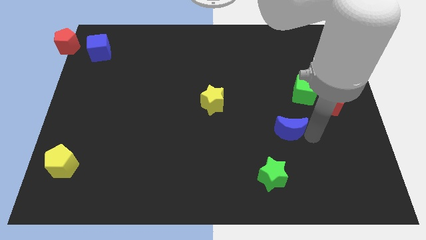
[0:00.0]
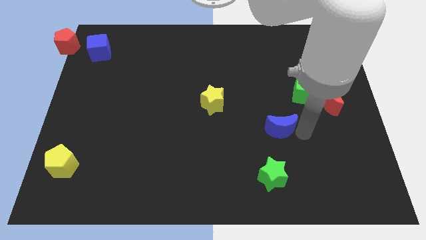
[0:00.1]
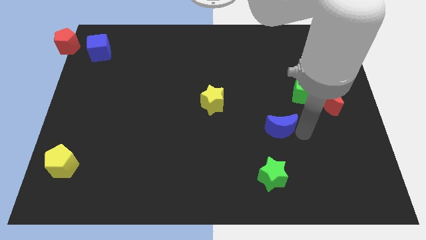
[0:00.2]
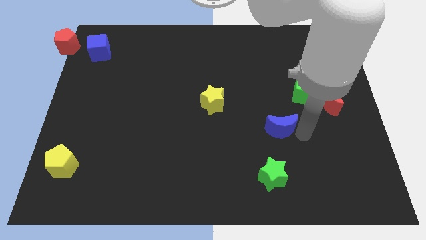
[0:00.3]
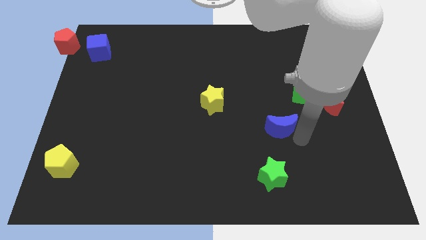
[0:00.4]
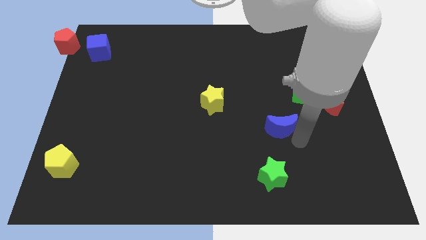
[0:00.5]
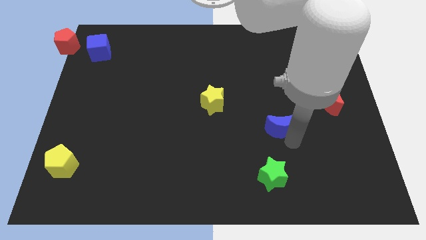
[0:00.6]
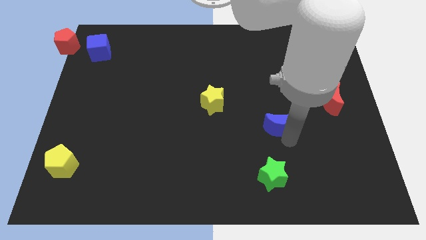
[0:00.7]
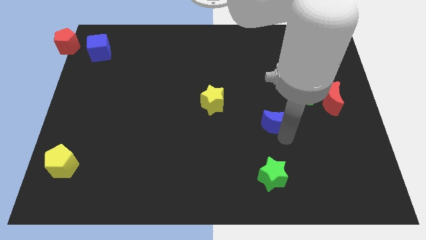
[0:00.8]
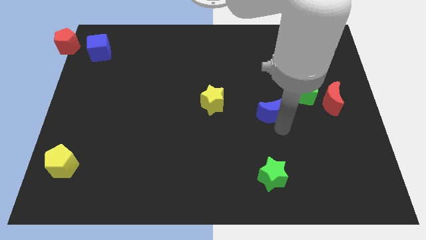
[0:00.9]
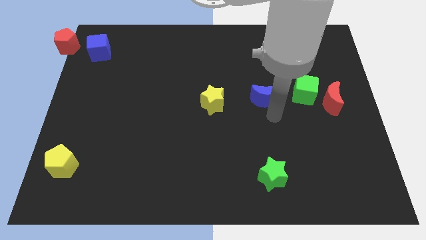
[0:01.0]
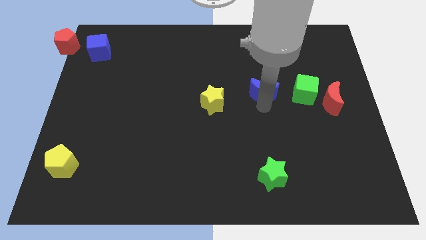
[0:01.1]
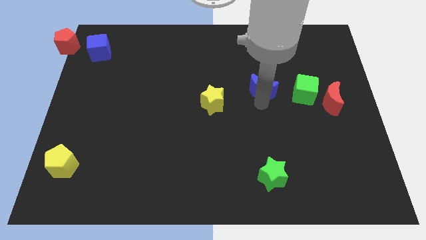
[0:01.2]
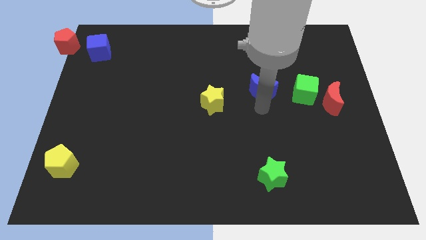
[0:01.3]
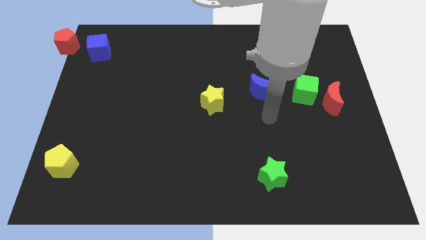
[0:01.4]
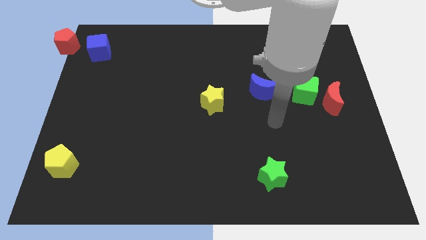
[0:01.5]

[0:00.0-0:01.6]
drag blue crescent above green star

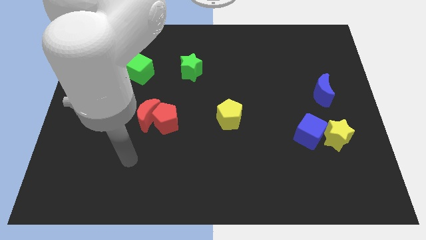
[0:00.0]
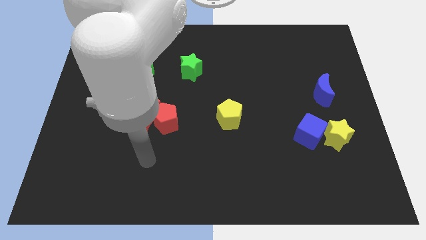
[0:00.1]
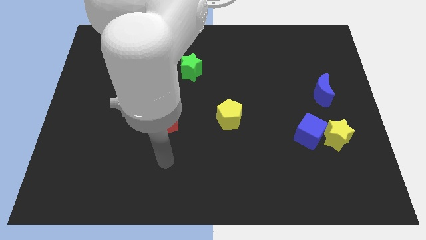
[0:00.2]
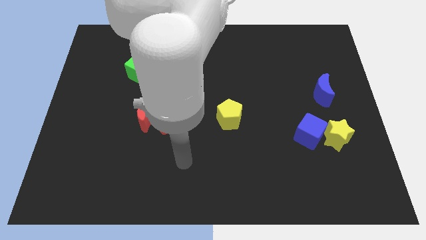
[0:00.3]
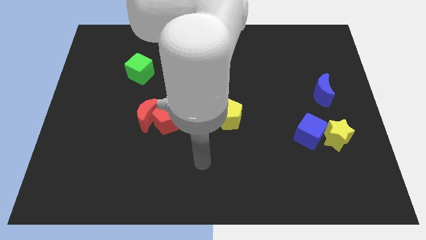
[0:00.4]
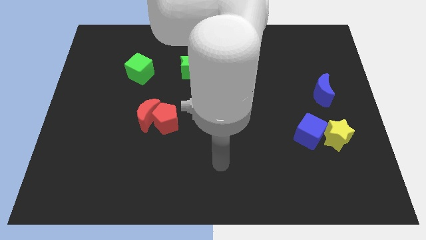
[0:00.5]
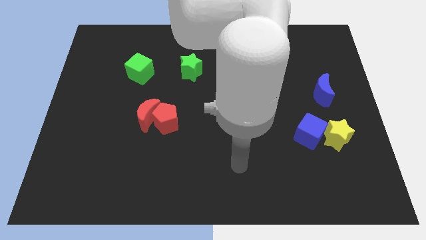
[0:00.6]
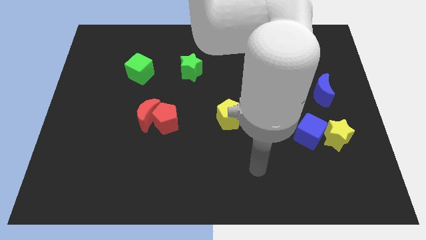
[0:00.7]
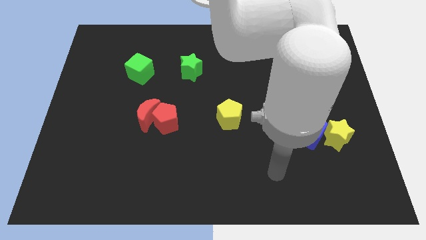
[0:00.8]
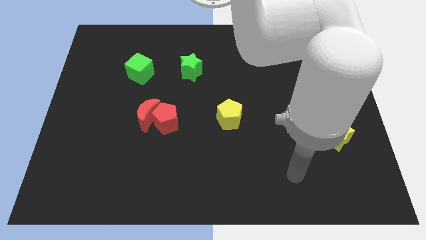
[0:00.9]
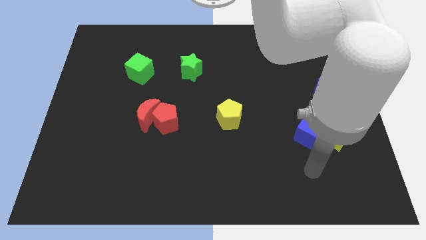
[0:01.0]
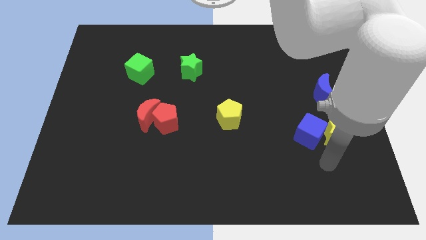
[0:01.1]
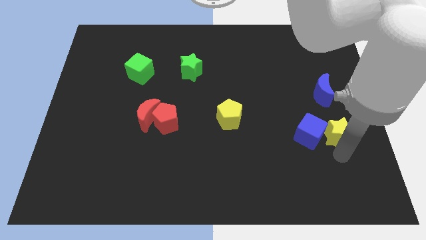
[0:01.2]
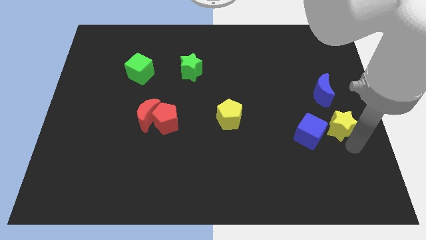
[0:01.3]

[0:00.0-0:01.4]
touch the yellow star

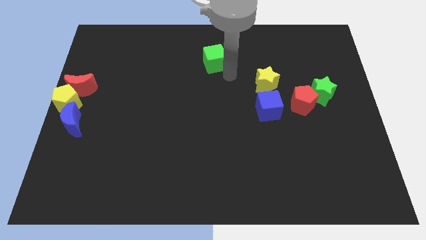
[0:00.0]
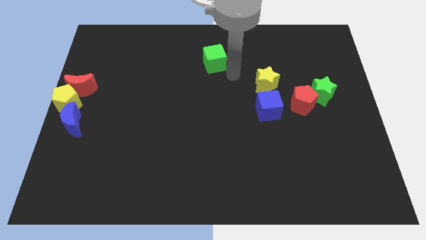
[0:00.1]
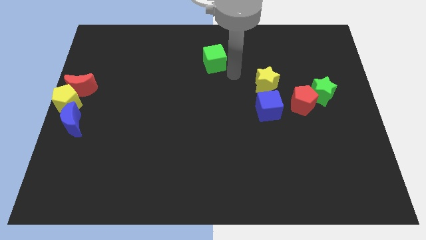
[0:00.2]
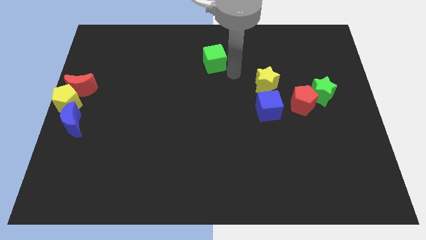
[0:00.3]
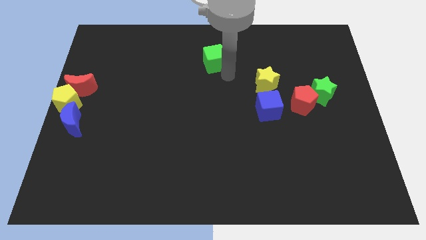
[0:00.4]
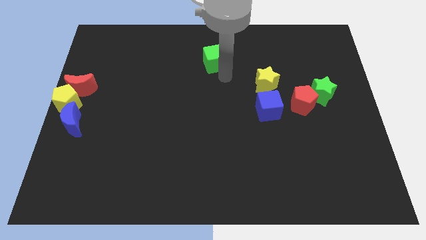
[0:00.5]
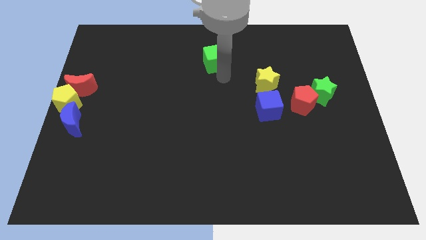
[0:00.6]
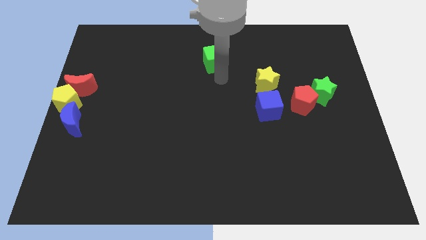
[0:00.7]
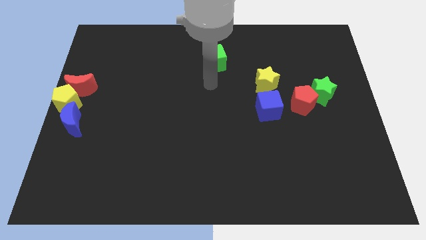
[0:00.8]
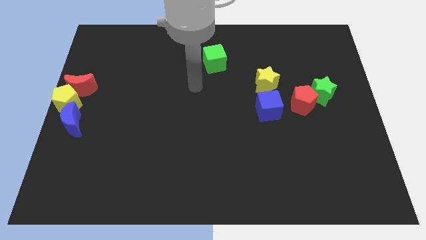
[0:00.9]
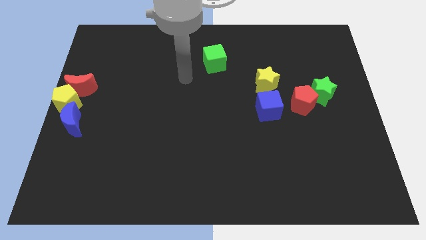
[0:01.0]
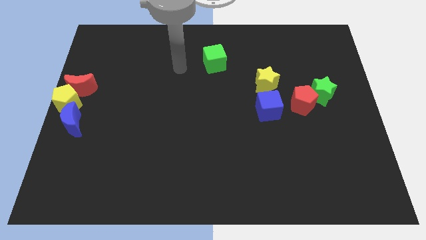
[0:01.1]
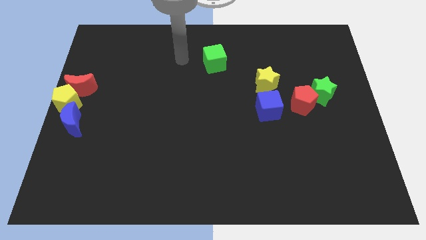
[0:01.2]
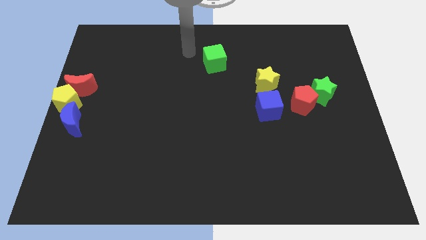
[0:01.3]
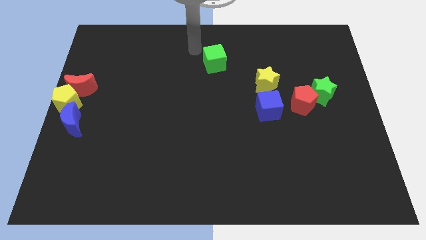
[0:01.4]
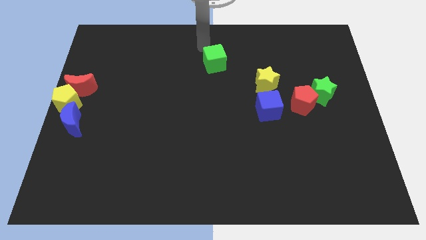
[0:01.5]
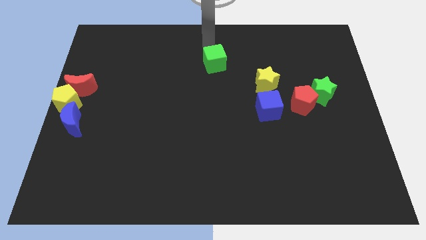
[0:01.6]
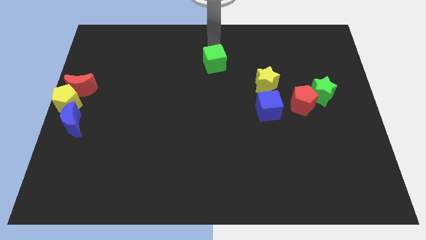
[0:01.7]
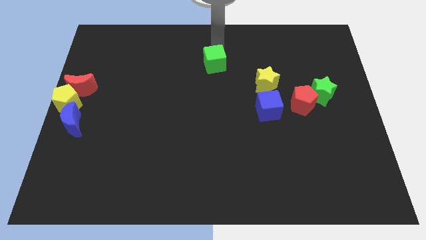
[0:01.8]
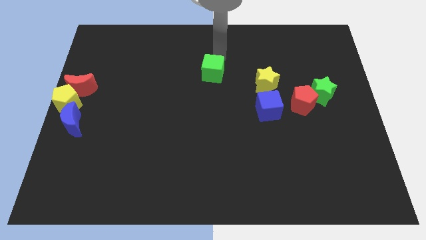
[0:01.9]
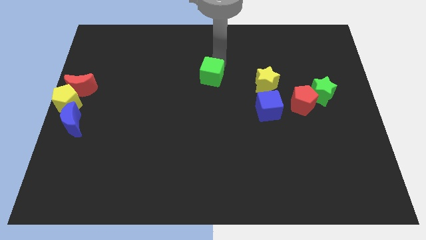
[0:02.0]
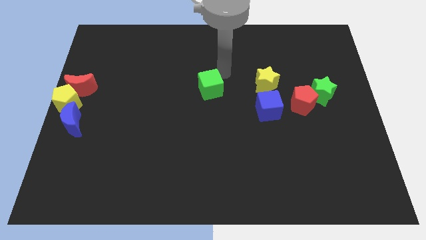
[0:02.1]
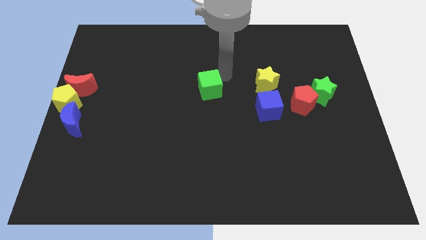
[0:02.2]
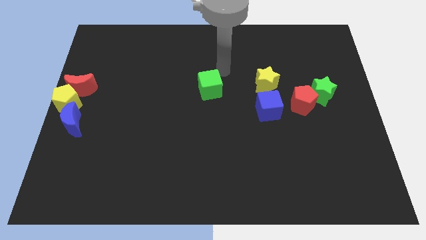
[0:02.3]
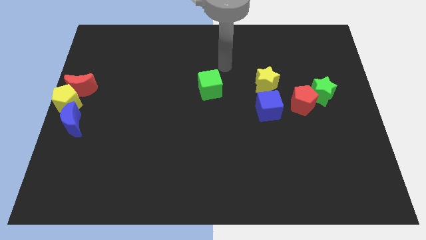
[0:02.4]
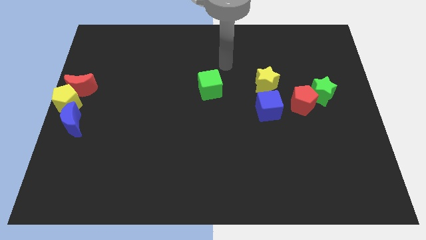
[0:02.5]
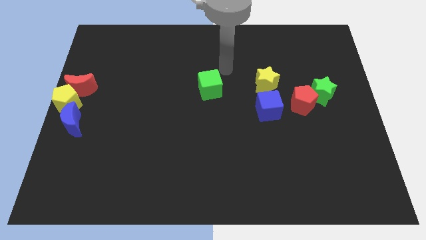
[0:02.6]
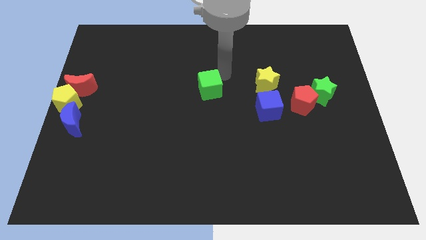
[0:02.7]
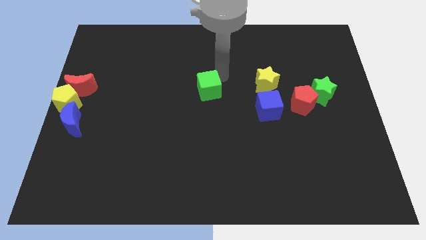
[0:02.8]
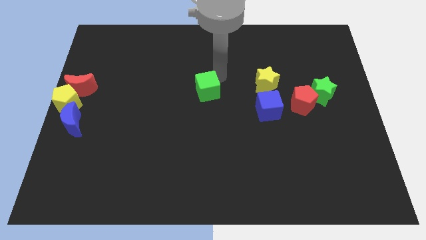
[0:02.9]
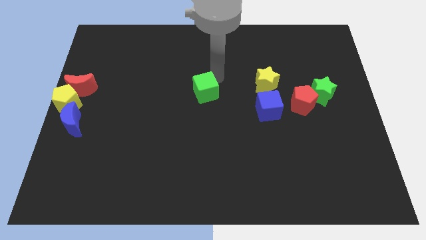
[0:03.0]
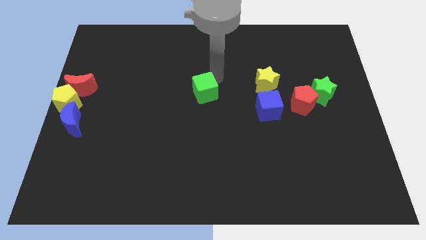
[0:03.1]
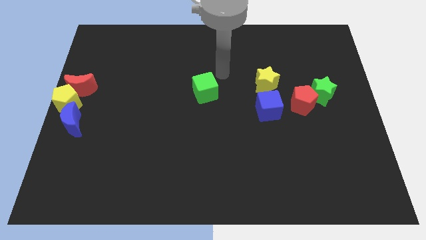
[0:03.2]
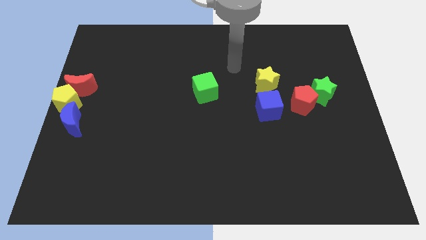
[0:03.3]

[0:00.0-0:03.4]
place the green cube at left side of the yellow star

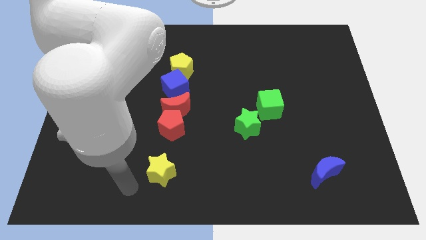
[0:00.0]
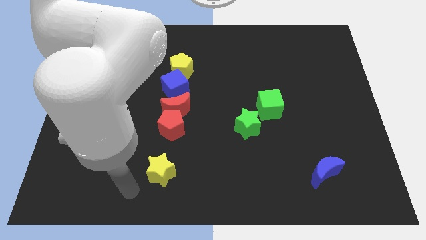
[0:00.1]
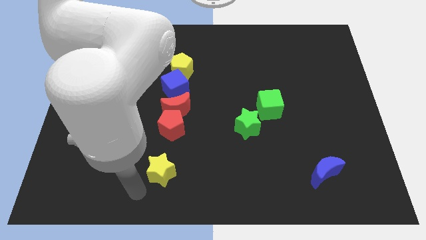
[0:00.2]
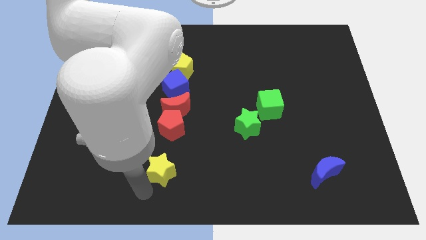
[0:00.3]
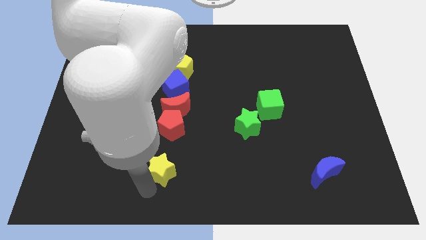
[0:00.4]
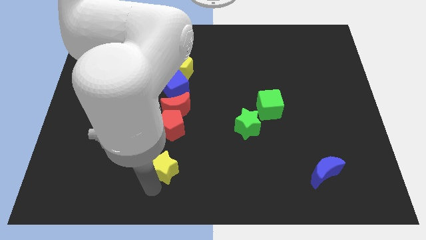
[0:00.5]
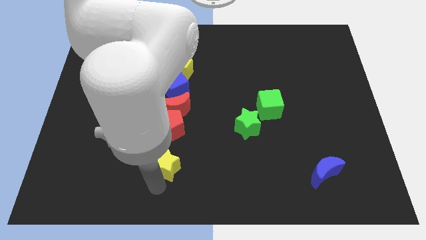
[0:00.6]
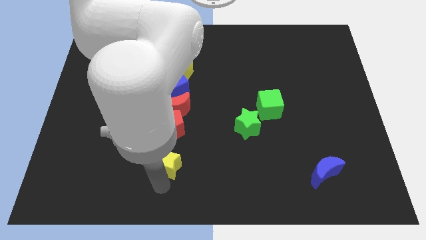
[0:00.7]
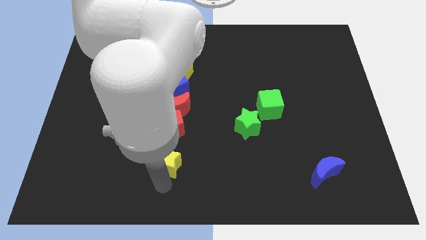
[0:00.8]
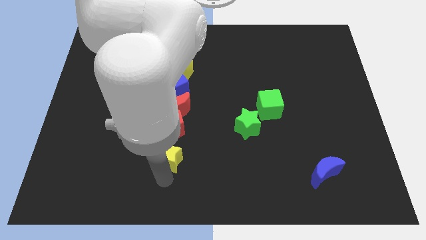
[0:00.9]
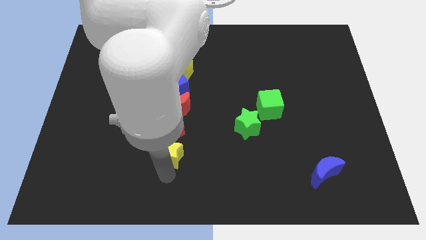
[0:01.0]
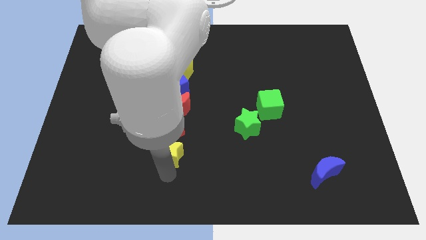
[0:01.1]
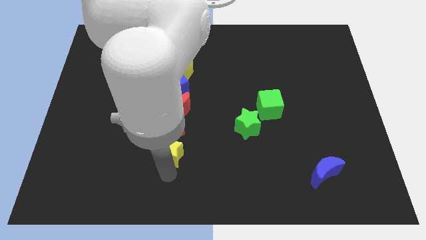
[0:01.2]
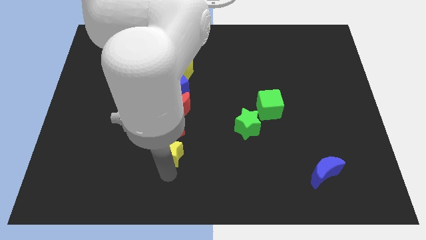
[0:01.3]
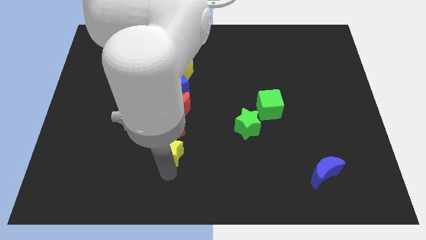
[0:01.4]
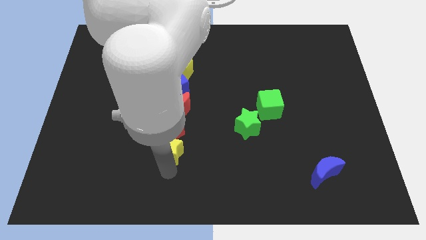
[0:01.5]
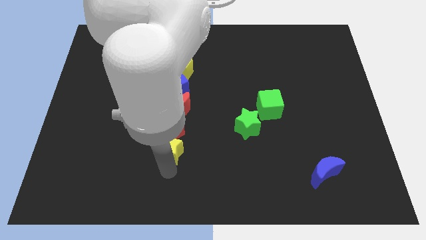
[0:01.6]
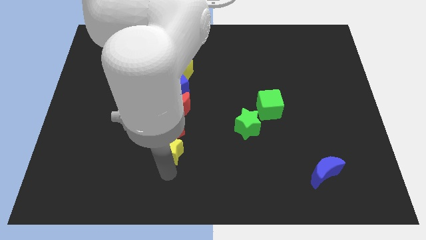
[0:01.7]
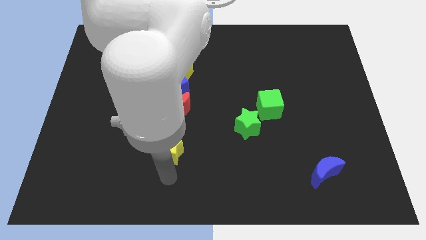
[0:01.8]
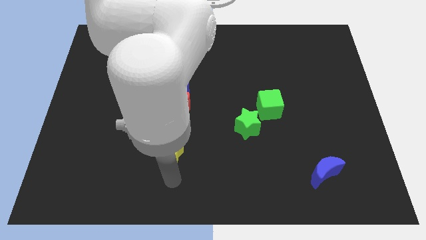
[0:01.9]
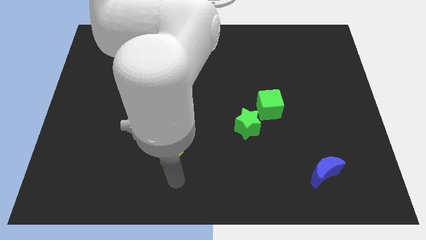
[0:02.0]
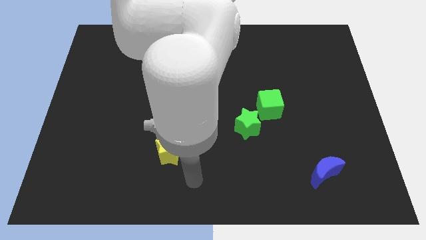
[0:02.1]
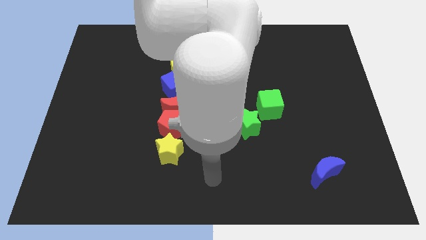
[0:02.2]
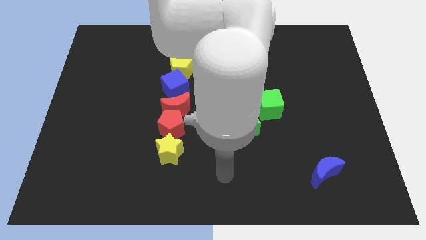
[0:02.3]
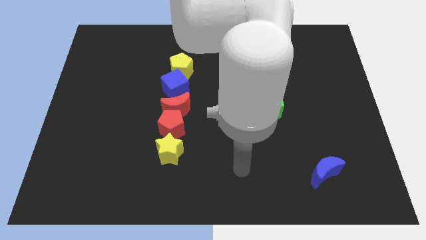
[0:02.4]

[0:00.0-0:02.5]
push the yellow star below the red pentagon

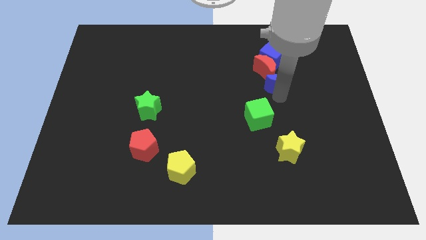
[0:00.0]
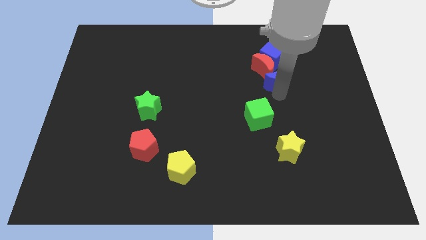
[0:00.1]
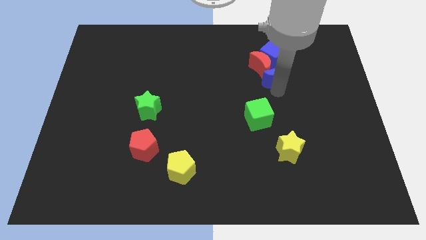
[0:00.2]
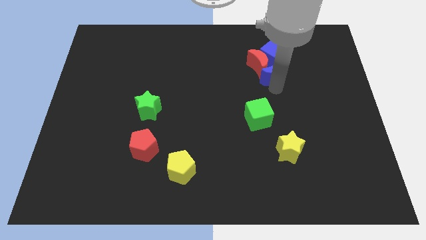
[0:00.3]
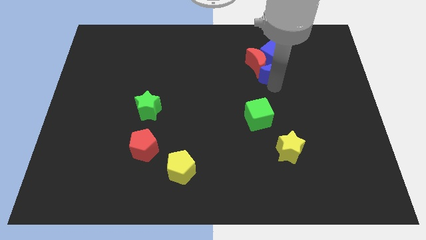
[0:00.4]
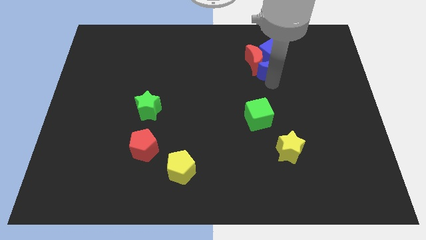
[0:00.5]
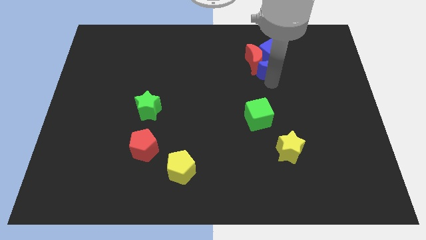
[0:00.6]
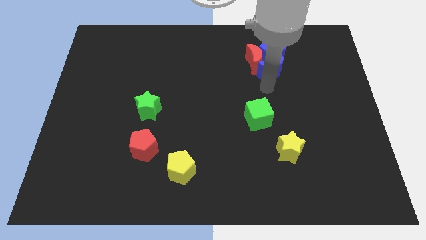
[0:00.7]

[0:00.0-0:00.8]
move the blue crescent below the blue cube
